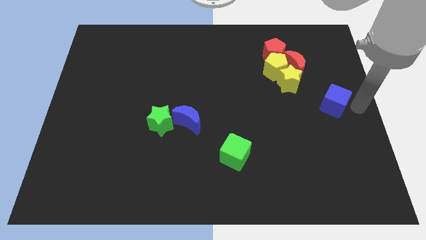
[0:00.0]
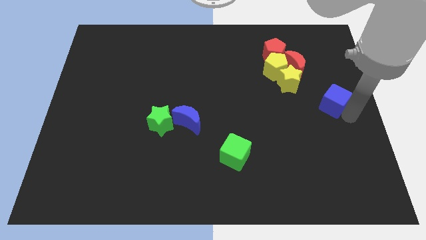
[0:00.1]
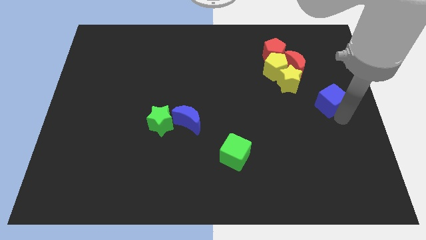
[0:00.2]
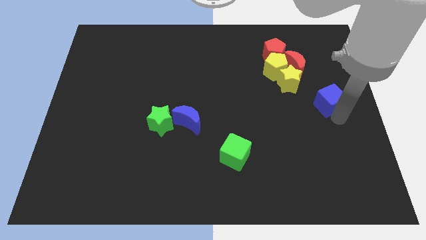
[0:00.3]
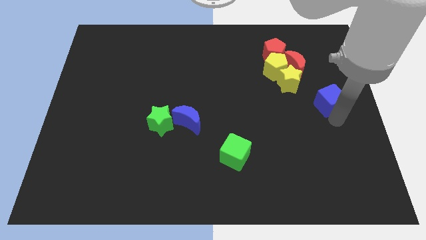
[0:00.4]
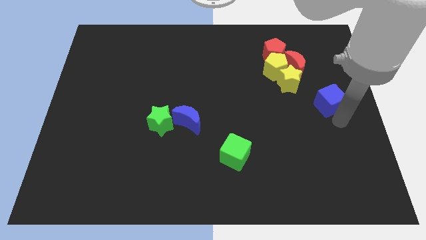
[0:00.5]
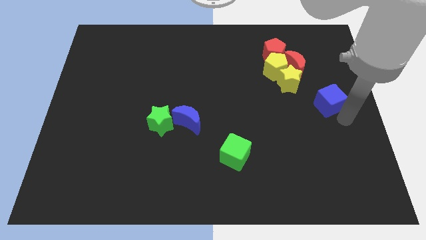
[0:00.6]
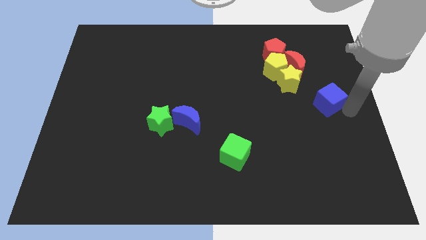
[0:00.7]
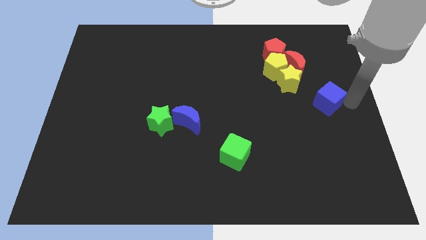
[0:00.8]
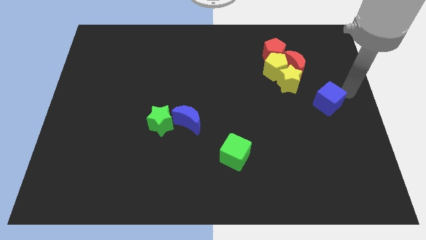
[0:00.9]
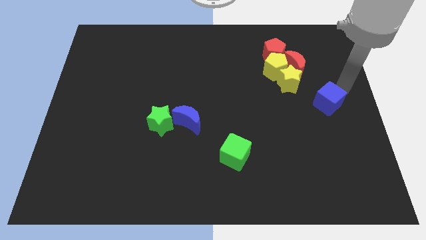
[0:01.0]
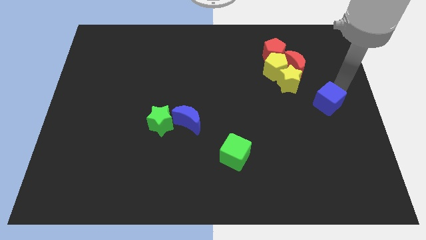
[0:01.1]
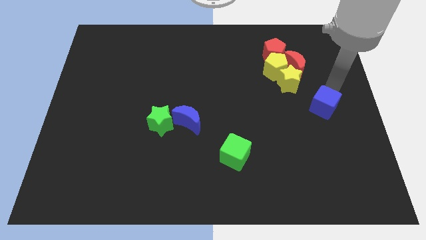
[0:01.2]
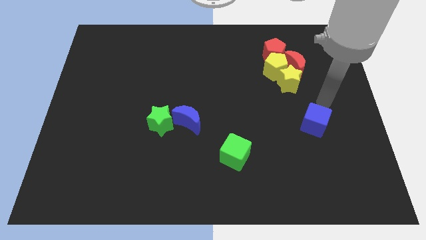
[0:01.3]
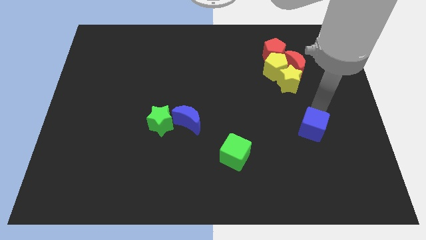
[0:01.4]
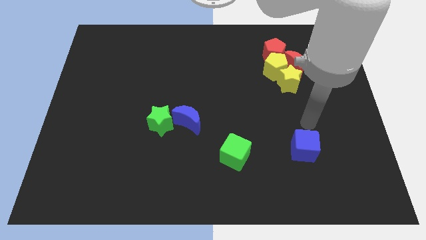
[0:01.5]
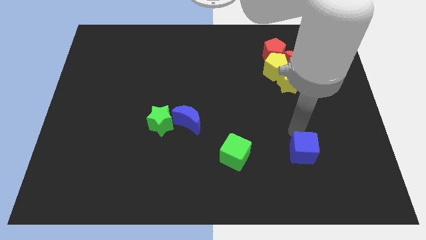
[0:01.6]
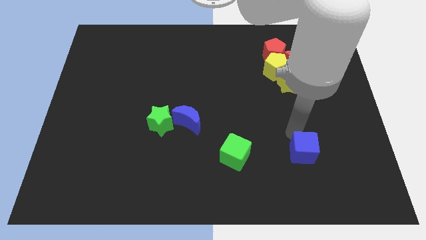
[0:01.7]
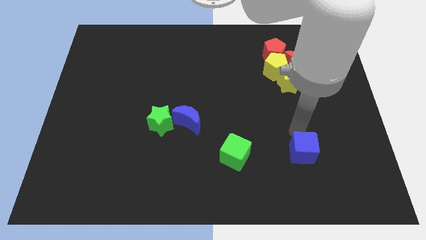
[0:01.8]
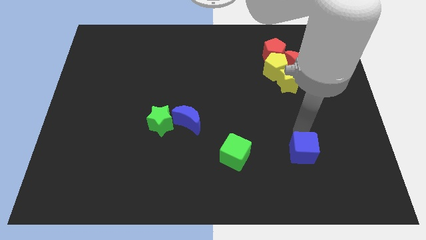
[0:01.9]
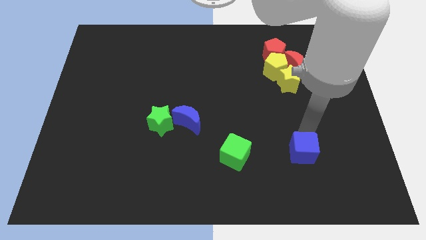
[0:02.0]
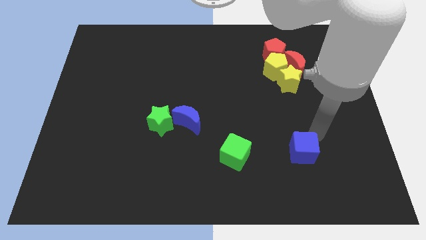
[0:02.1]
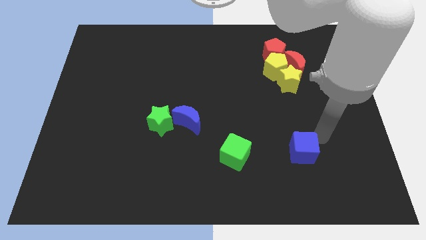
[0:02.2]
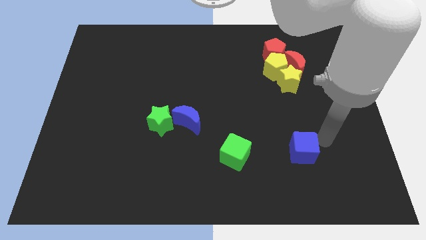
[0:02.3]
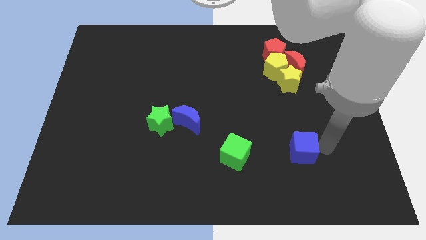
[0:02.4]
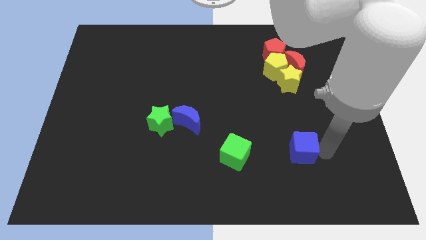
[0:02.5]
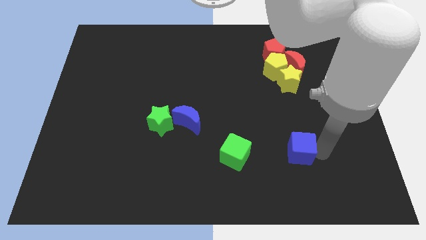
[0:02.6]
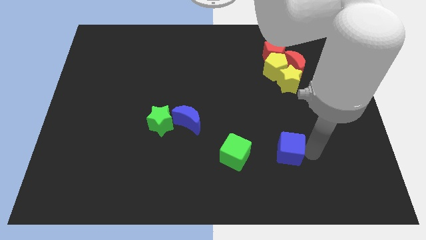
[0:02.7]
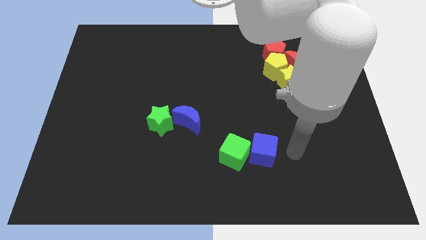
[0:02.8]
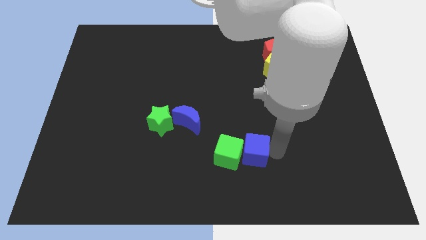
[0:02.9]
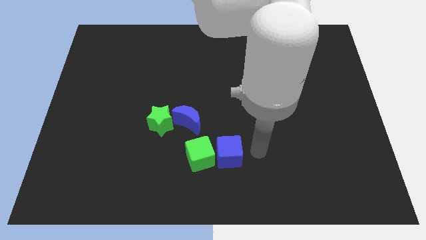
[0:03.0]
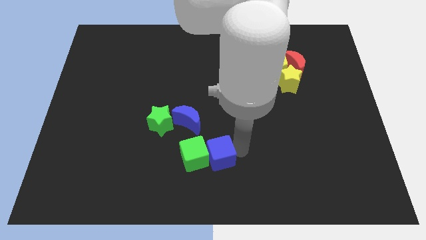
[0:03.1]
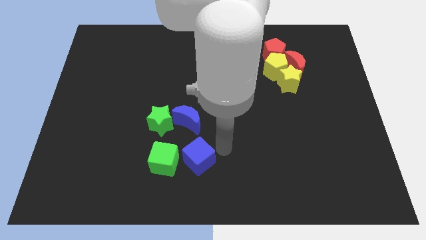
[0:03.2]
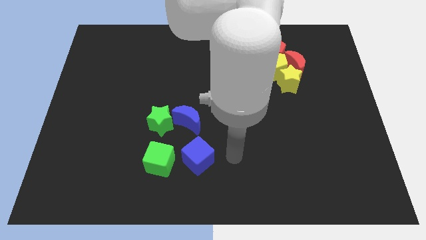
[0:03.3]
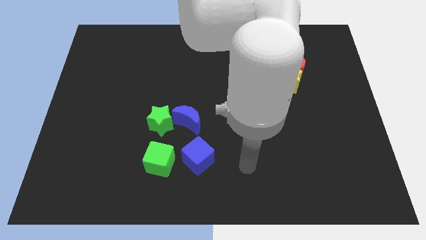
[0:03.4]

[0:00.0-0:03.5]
move the blue cube towards the right to green cube

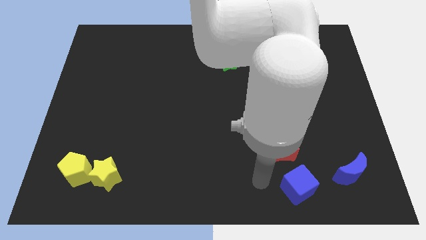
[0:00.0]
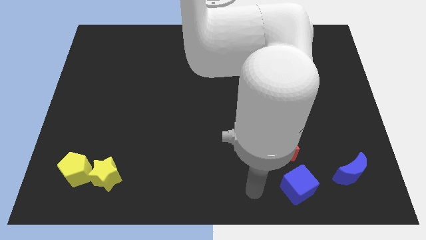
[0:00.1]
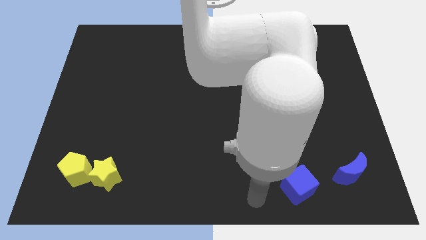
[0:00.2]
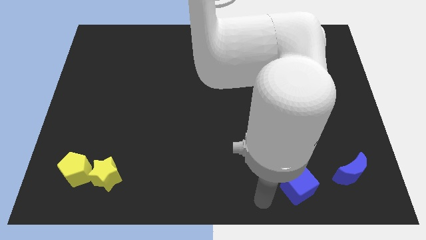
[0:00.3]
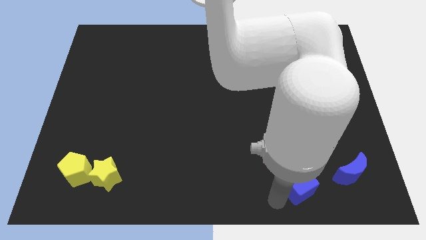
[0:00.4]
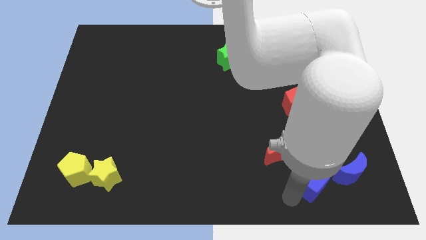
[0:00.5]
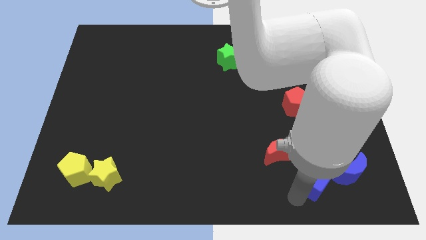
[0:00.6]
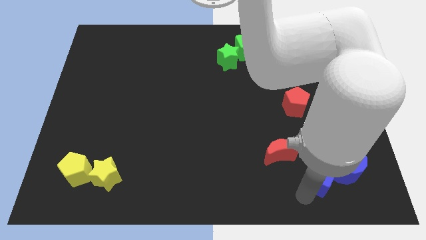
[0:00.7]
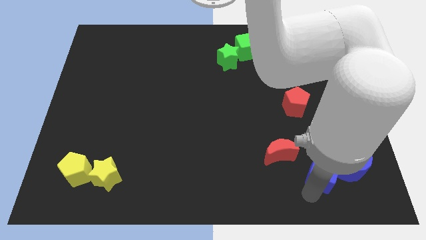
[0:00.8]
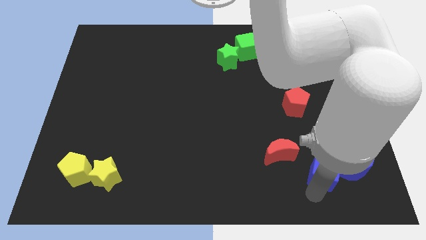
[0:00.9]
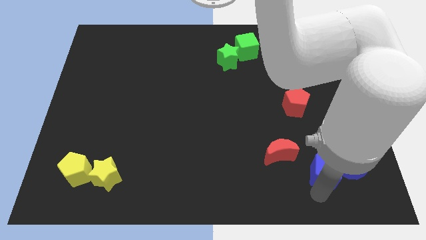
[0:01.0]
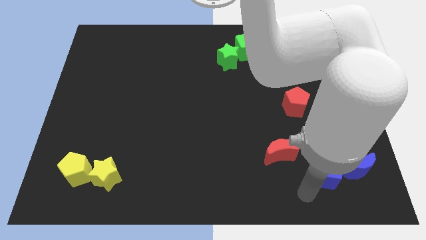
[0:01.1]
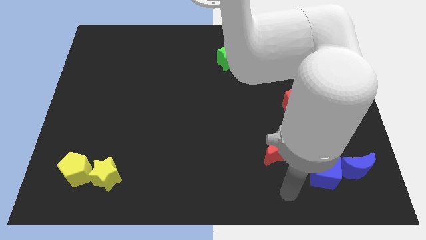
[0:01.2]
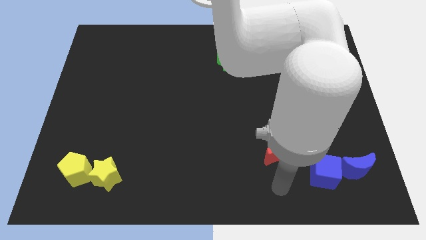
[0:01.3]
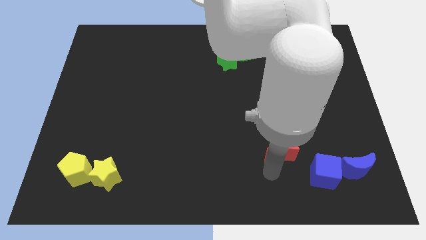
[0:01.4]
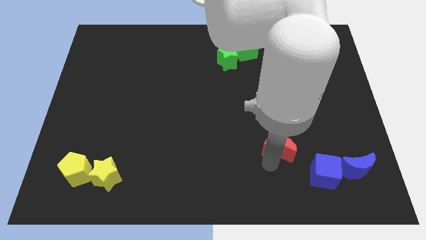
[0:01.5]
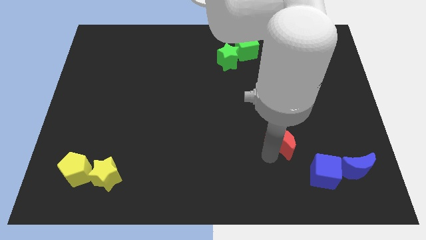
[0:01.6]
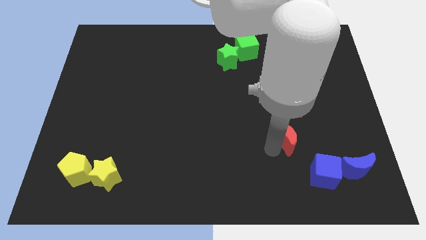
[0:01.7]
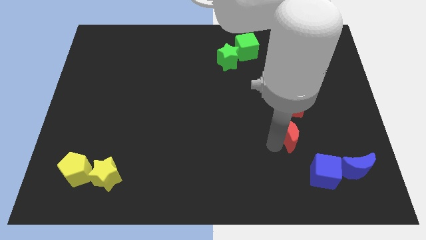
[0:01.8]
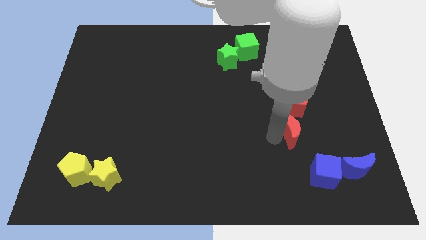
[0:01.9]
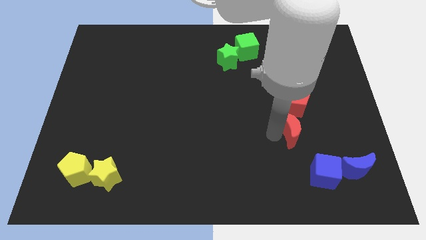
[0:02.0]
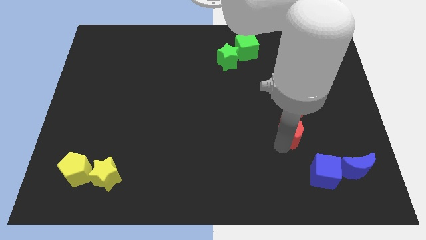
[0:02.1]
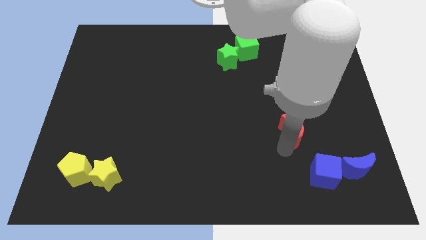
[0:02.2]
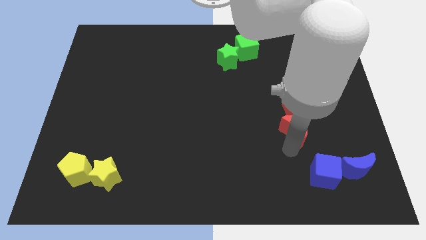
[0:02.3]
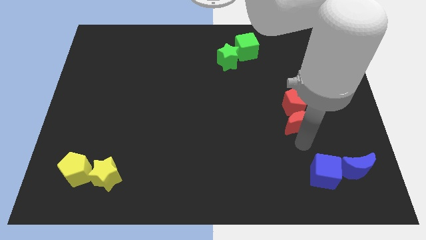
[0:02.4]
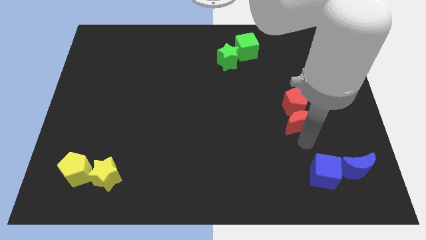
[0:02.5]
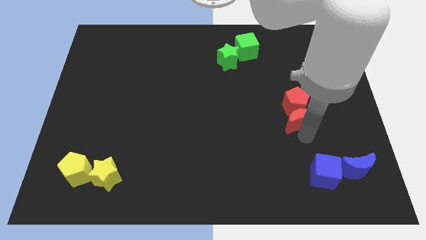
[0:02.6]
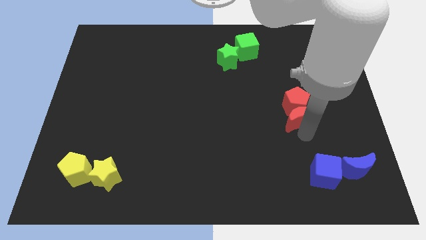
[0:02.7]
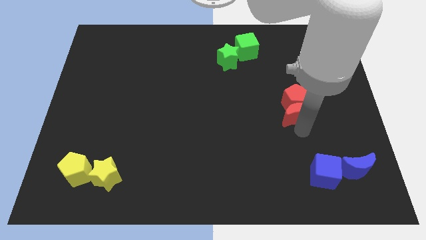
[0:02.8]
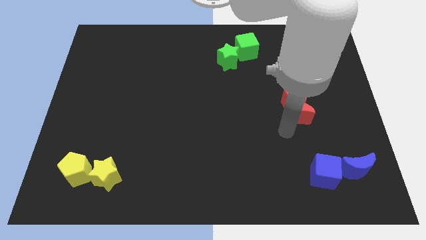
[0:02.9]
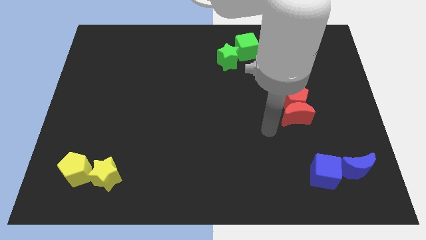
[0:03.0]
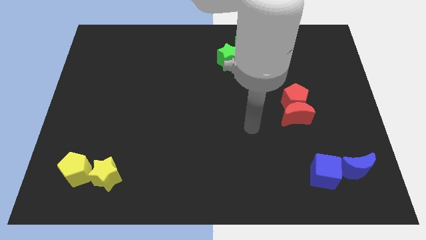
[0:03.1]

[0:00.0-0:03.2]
move red crescent towards the red pentagon

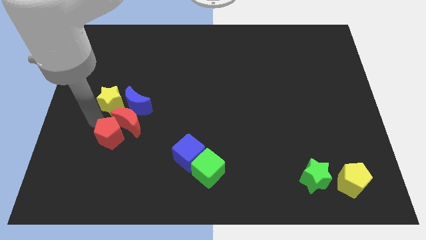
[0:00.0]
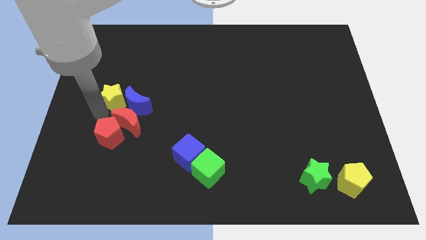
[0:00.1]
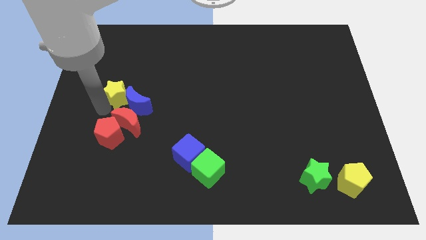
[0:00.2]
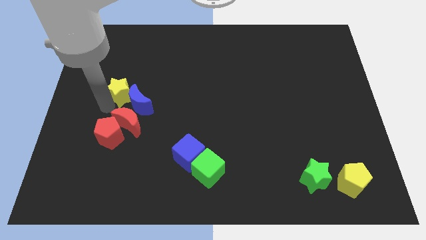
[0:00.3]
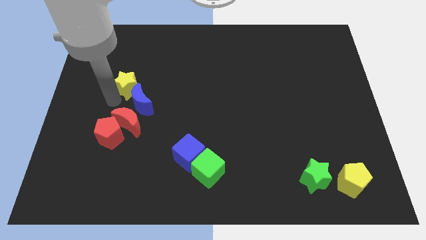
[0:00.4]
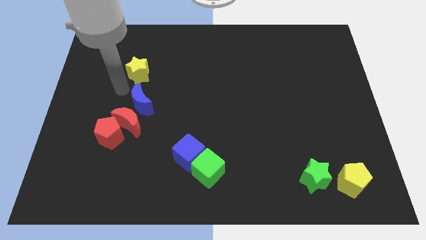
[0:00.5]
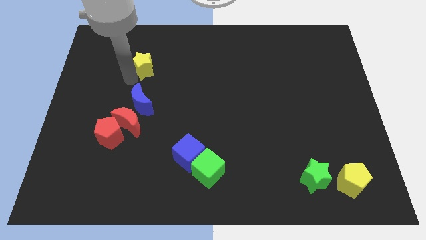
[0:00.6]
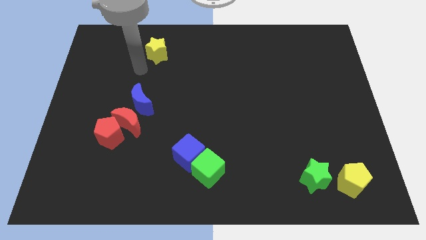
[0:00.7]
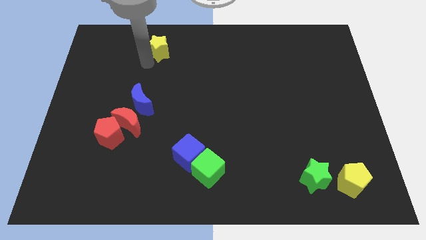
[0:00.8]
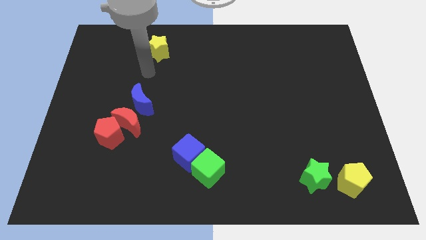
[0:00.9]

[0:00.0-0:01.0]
place yellow star vertically above blue crescent

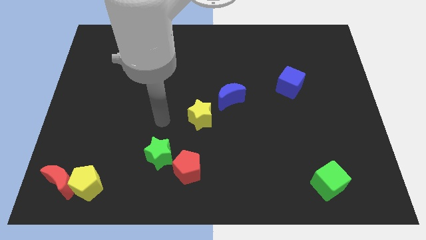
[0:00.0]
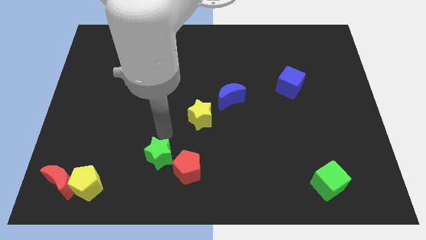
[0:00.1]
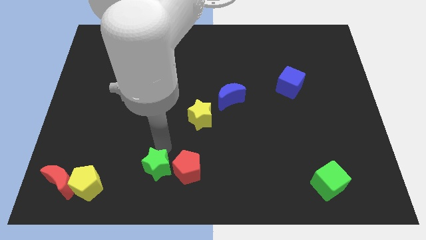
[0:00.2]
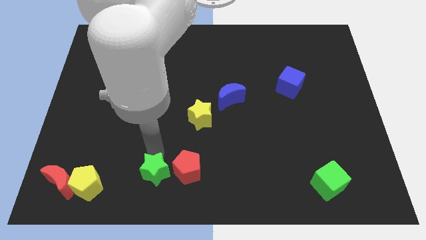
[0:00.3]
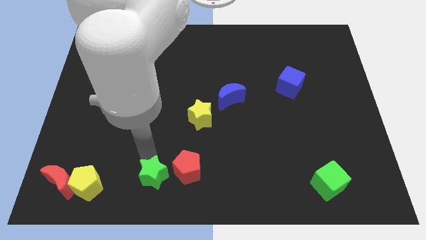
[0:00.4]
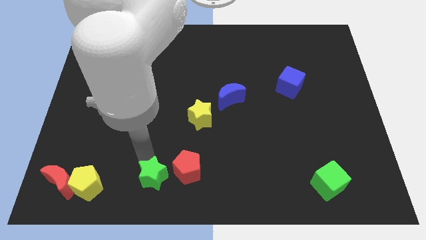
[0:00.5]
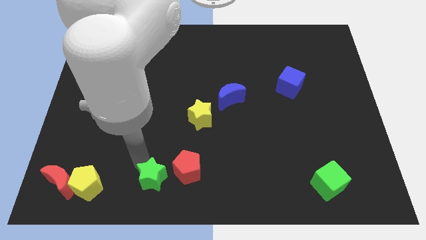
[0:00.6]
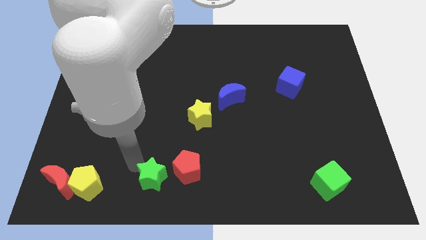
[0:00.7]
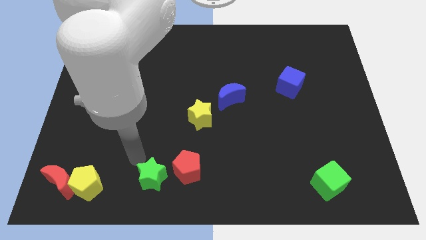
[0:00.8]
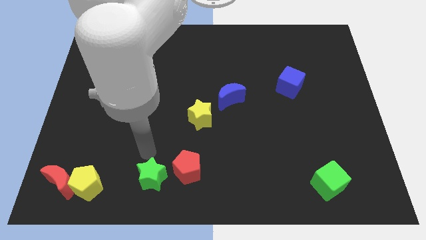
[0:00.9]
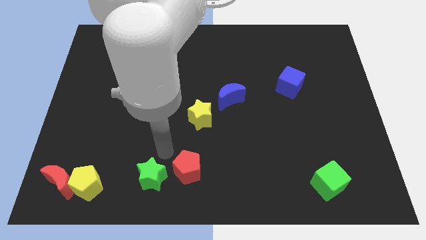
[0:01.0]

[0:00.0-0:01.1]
push the green star to the left of the red pentagon
